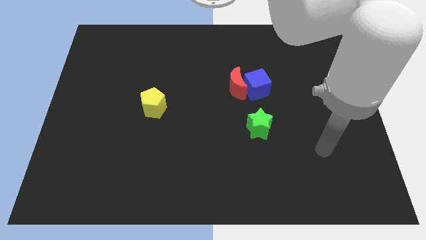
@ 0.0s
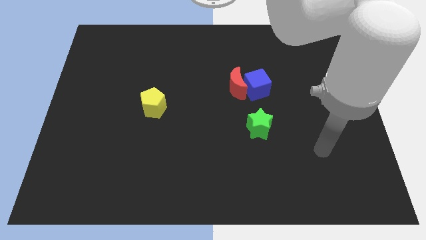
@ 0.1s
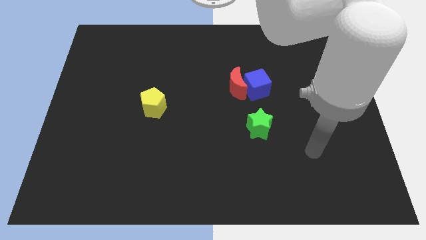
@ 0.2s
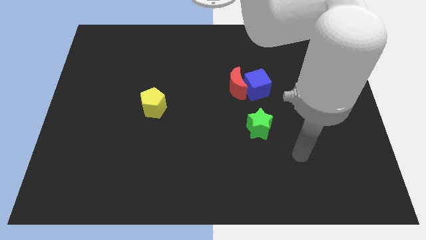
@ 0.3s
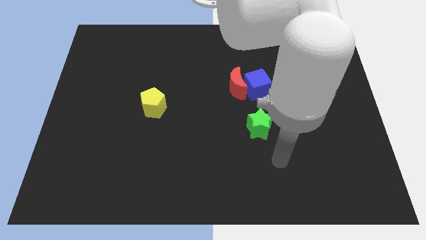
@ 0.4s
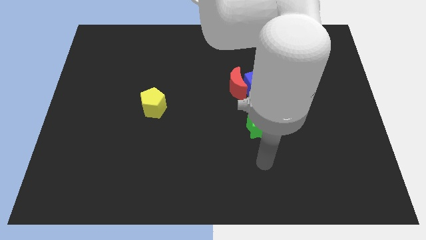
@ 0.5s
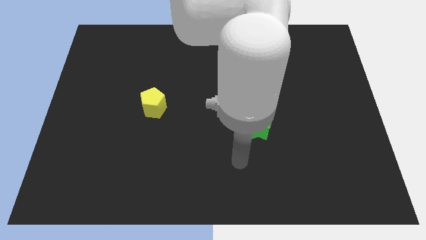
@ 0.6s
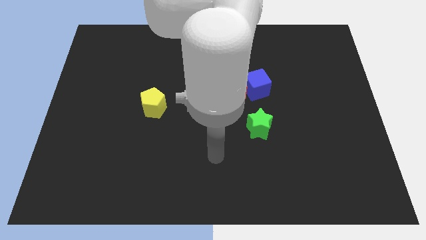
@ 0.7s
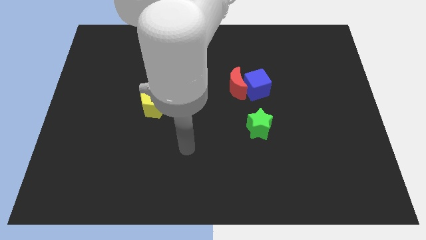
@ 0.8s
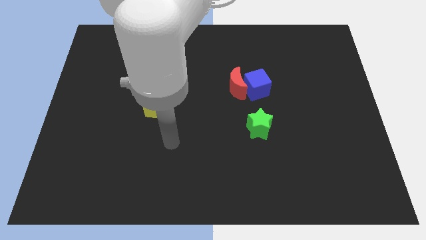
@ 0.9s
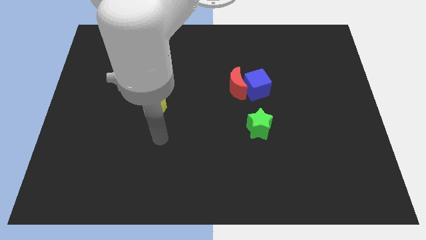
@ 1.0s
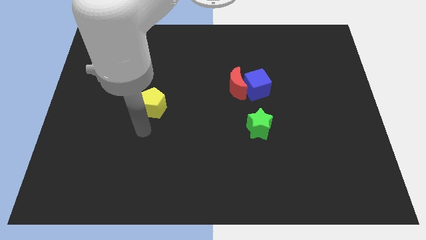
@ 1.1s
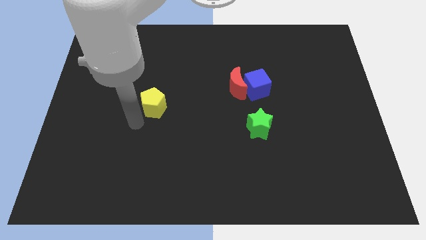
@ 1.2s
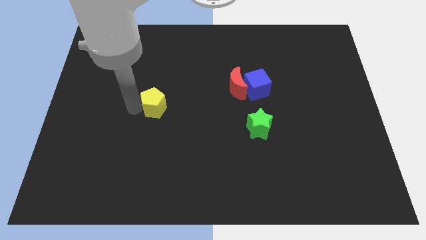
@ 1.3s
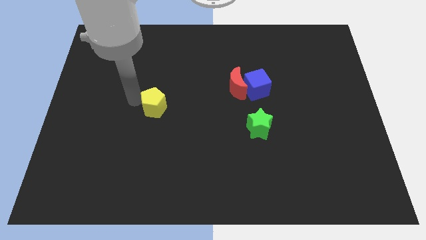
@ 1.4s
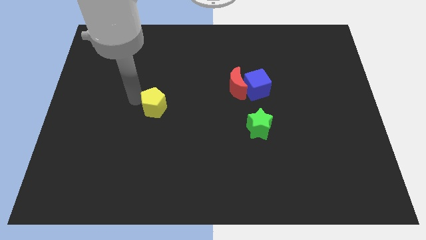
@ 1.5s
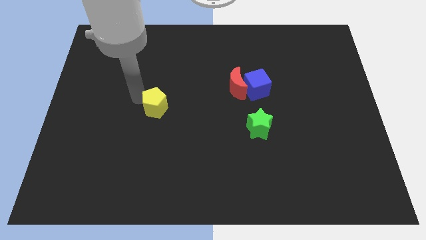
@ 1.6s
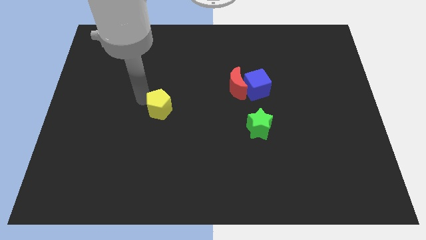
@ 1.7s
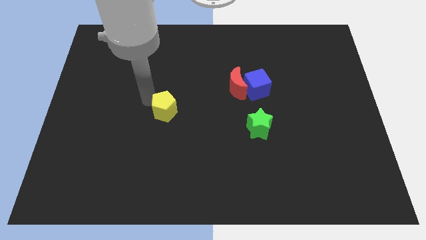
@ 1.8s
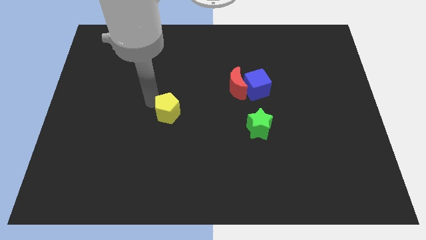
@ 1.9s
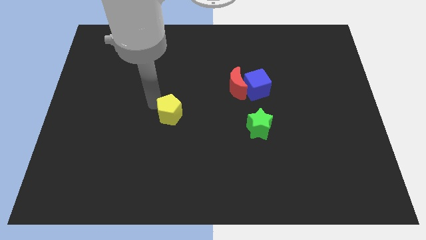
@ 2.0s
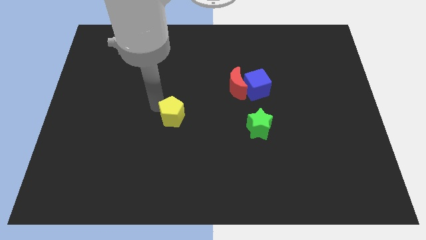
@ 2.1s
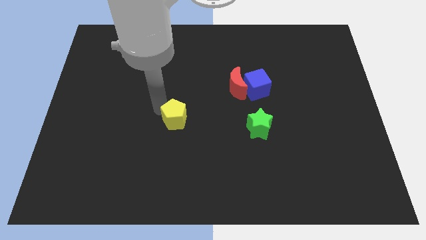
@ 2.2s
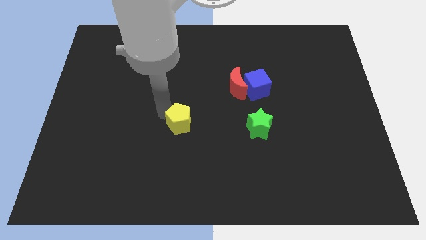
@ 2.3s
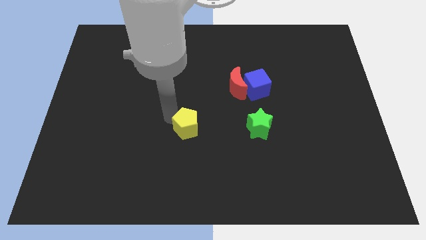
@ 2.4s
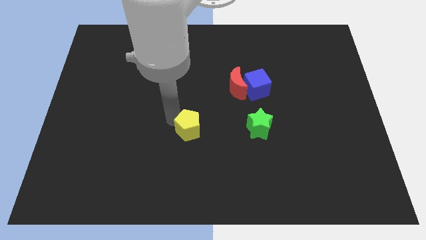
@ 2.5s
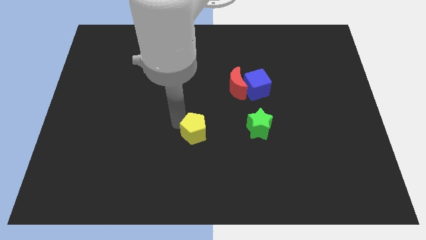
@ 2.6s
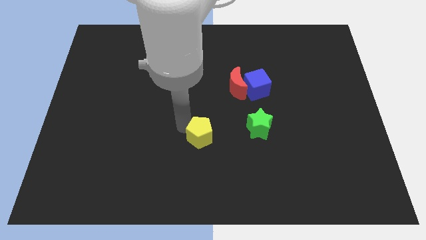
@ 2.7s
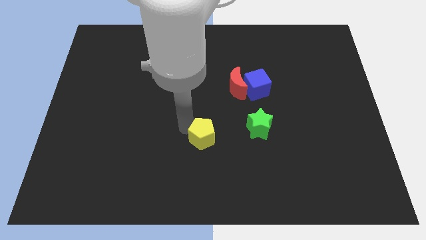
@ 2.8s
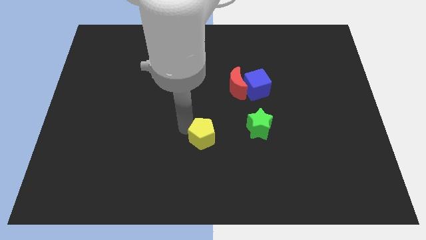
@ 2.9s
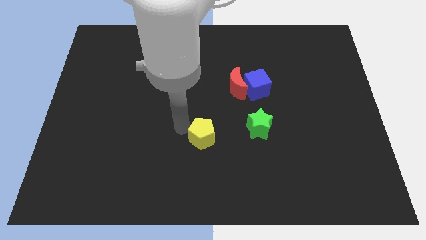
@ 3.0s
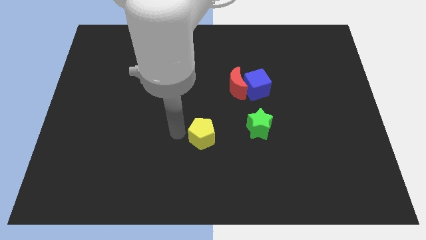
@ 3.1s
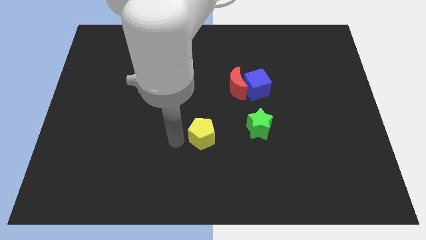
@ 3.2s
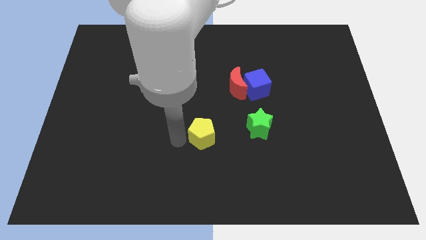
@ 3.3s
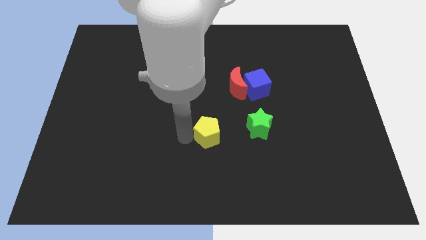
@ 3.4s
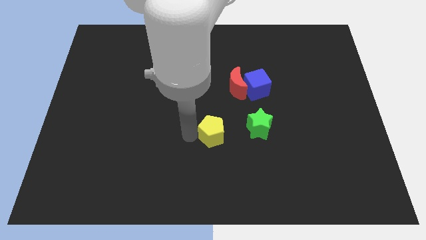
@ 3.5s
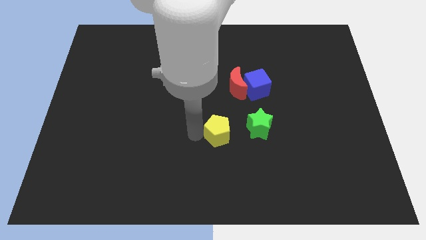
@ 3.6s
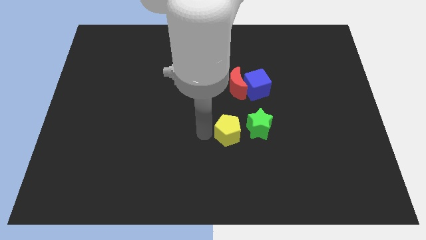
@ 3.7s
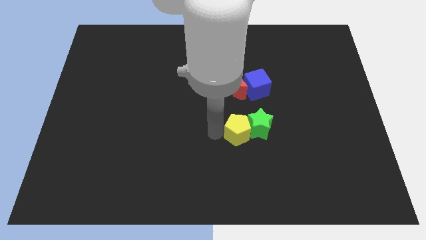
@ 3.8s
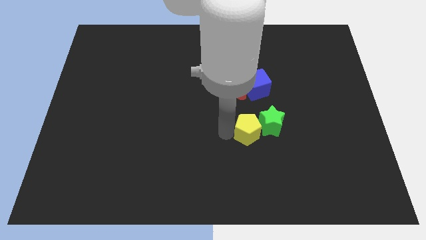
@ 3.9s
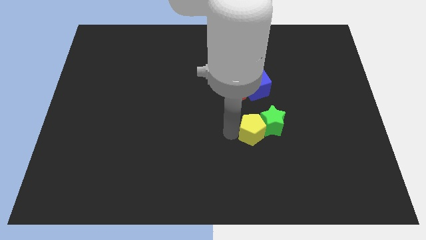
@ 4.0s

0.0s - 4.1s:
move the yellow block next to the green block

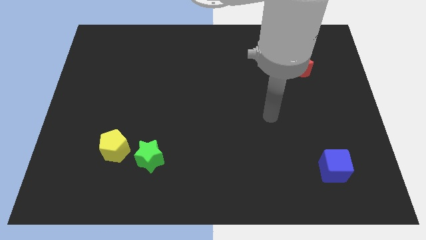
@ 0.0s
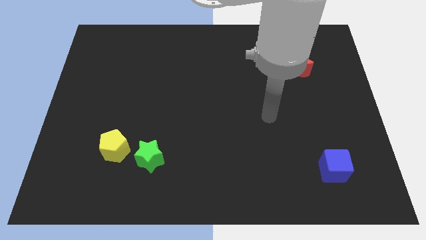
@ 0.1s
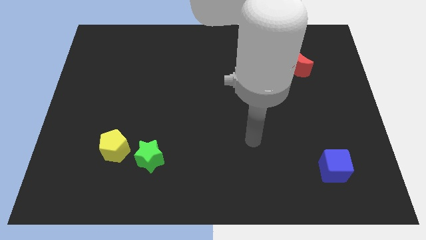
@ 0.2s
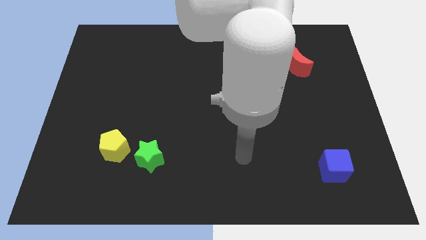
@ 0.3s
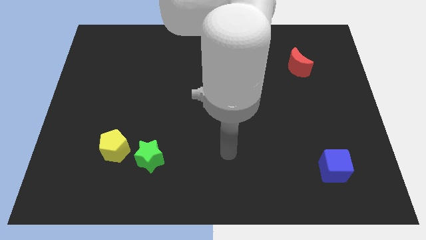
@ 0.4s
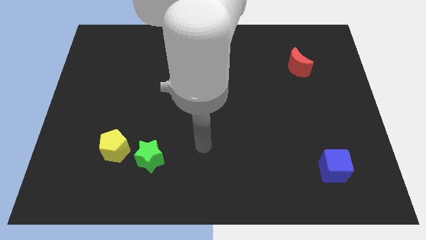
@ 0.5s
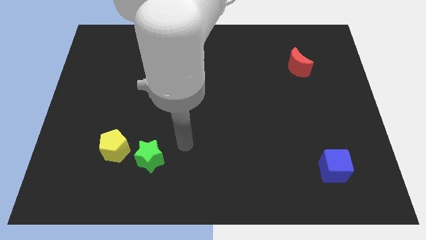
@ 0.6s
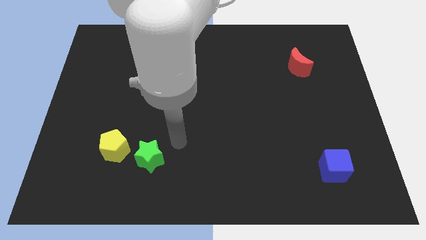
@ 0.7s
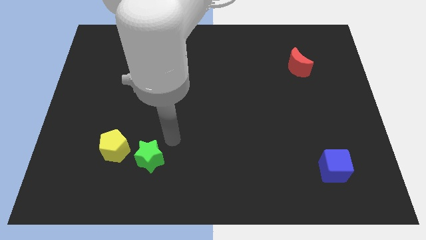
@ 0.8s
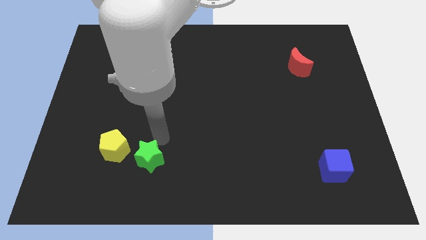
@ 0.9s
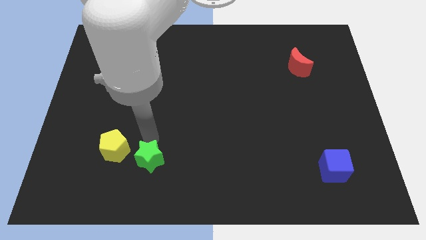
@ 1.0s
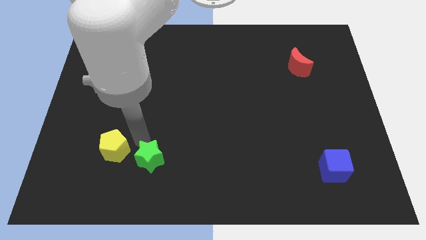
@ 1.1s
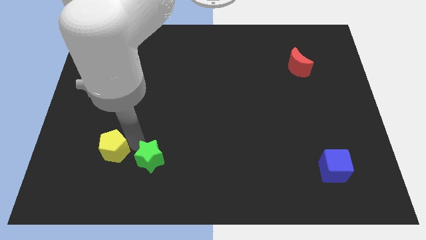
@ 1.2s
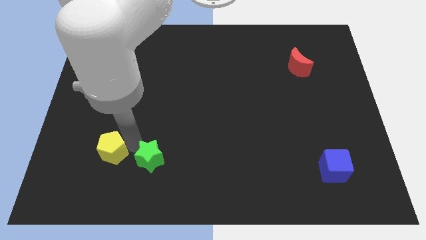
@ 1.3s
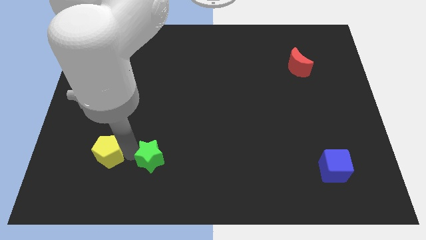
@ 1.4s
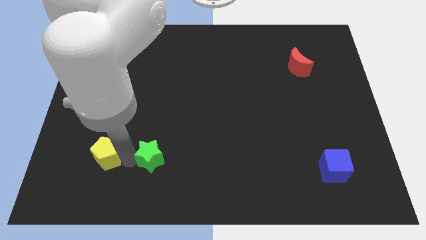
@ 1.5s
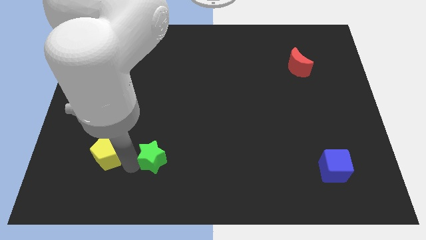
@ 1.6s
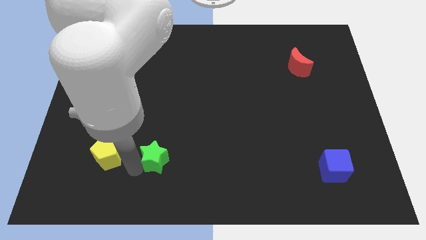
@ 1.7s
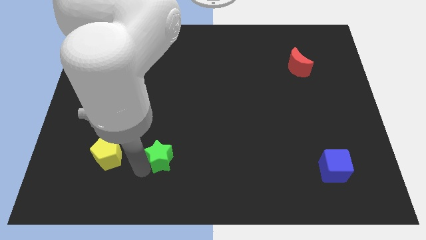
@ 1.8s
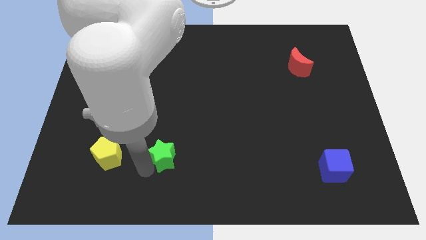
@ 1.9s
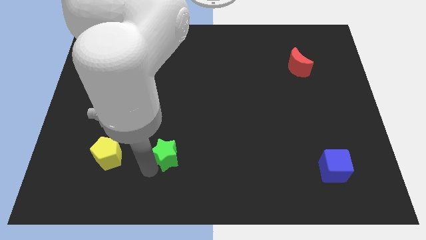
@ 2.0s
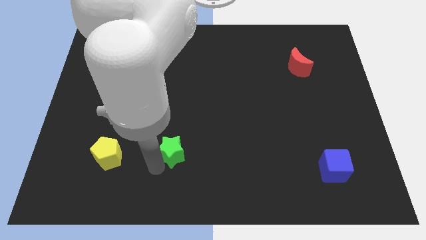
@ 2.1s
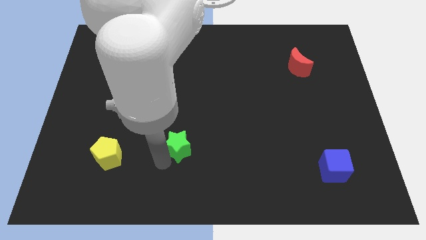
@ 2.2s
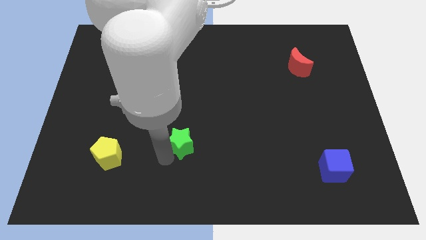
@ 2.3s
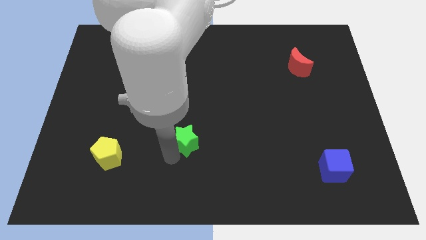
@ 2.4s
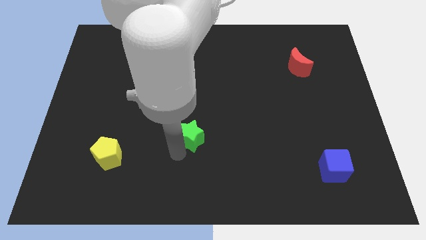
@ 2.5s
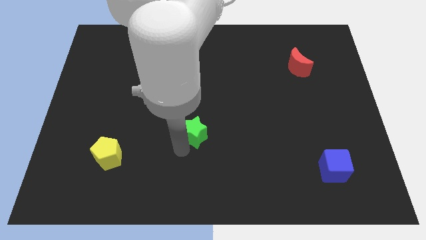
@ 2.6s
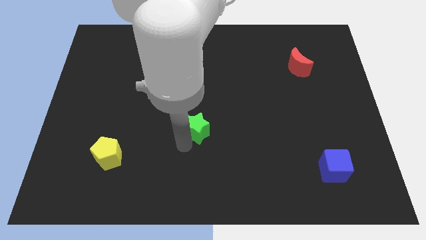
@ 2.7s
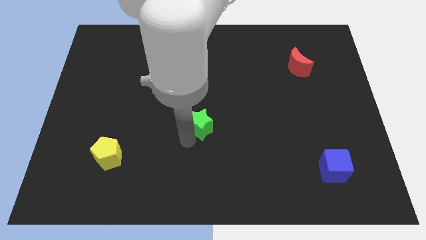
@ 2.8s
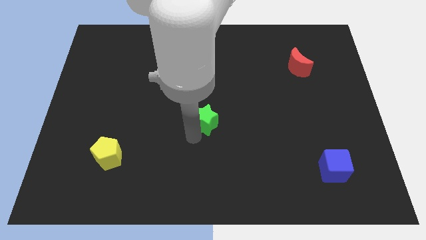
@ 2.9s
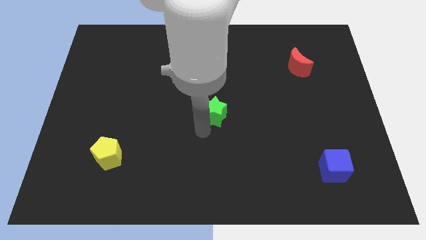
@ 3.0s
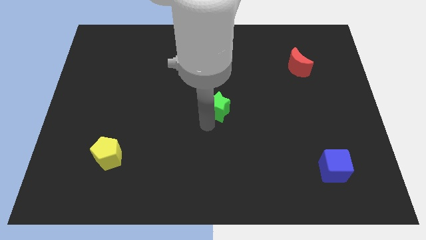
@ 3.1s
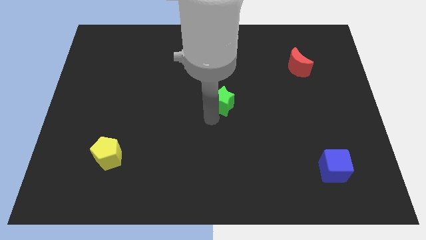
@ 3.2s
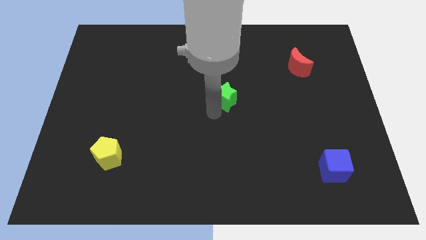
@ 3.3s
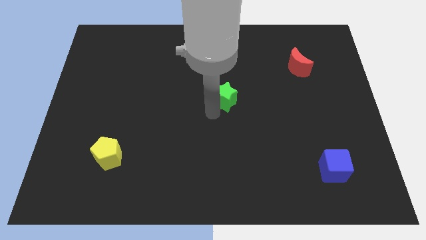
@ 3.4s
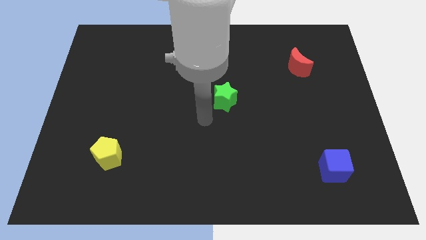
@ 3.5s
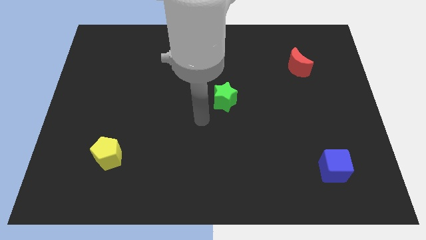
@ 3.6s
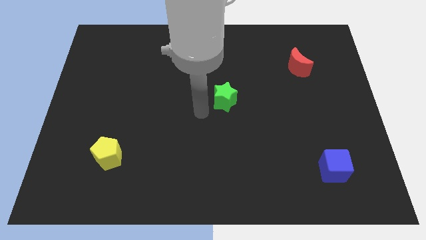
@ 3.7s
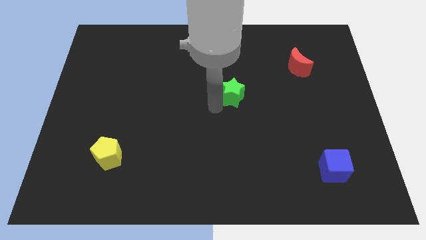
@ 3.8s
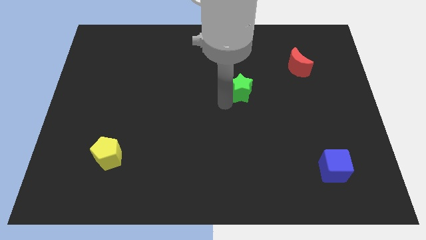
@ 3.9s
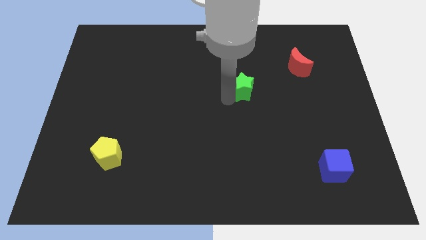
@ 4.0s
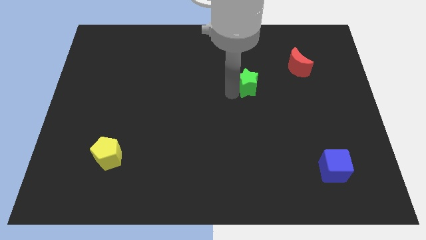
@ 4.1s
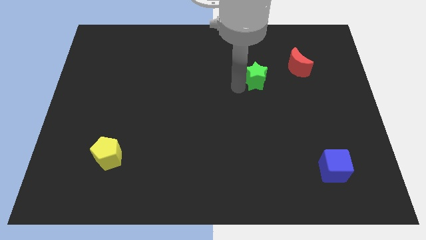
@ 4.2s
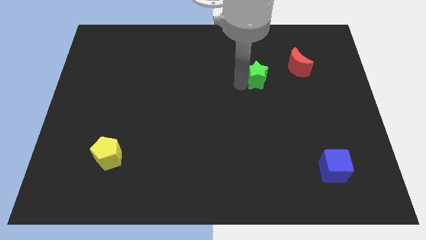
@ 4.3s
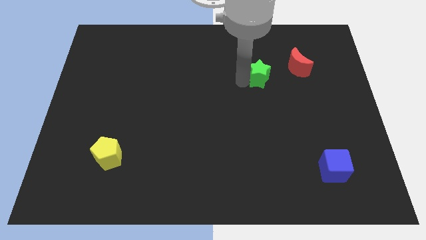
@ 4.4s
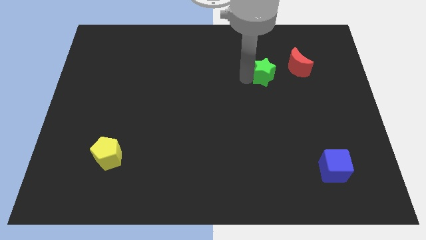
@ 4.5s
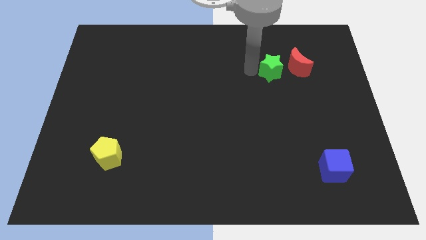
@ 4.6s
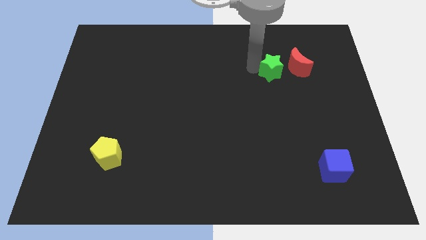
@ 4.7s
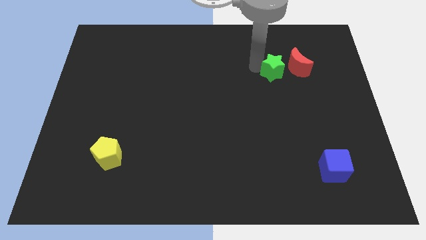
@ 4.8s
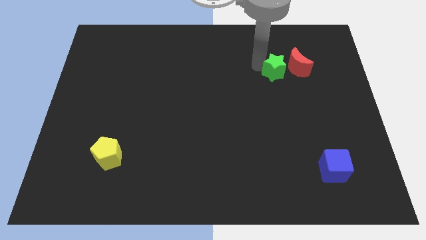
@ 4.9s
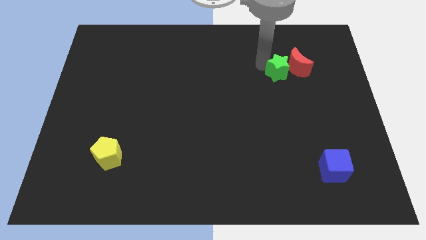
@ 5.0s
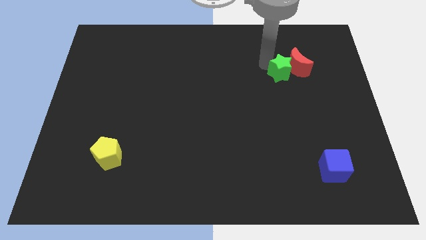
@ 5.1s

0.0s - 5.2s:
move the green block close to the red block
